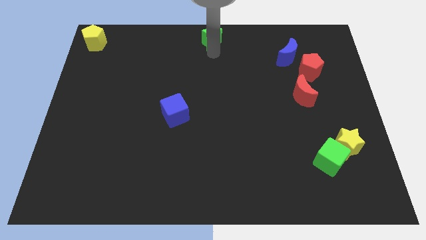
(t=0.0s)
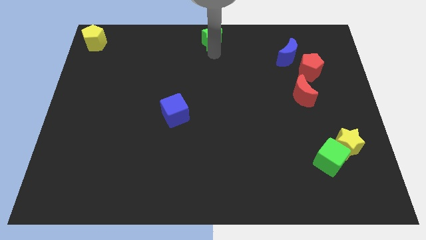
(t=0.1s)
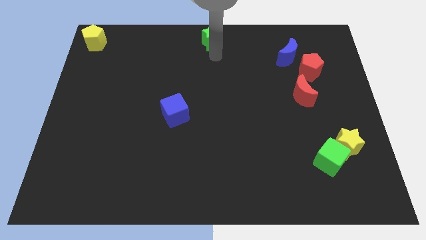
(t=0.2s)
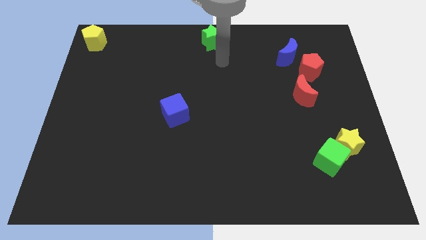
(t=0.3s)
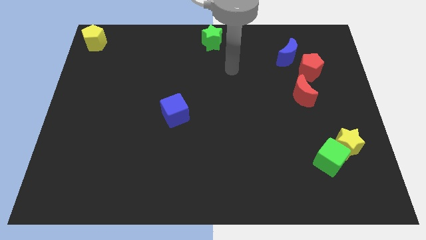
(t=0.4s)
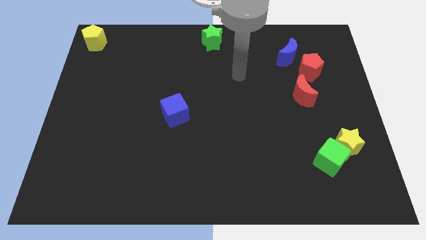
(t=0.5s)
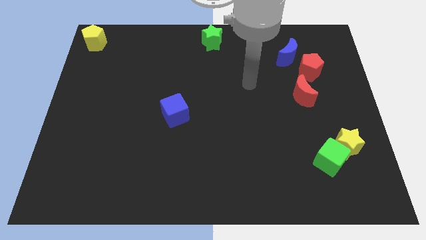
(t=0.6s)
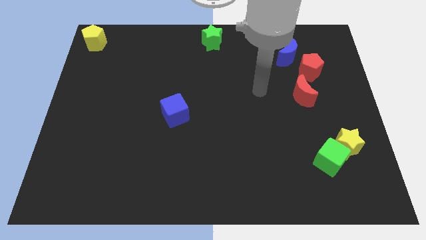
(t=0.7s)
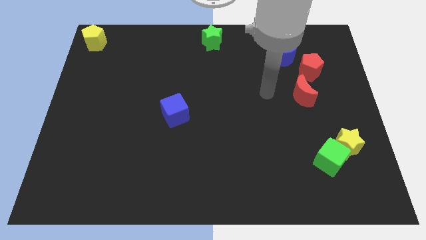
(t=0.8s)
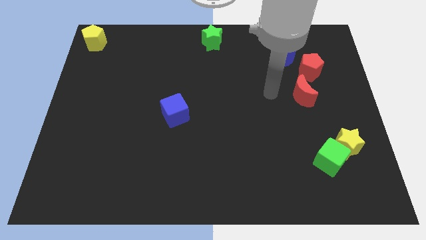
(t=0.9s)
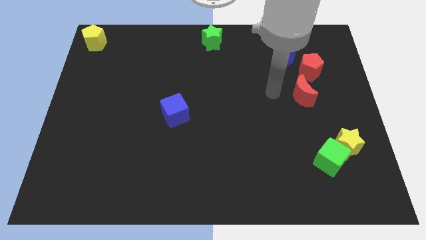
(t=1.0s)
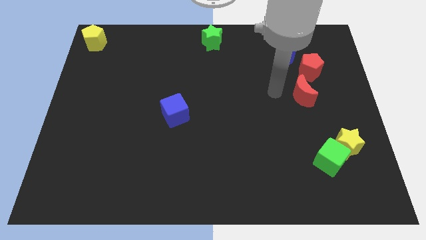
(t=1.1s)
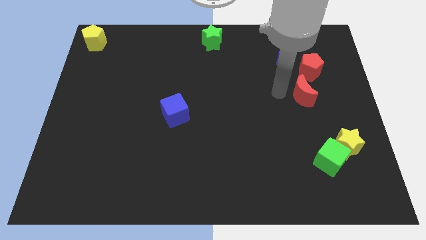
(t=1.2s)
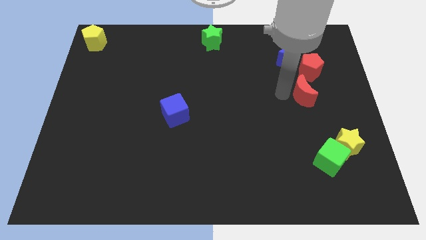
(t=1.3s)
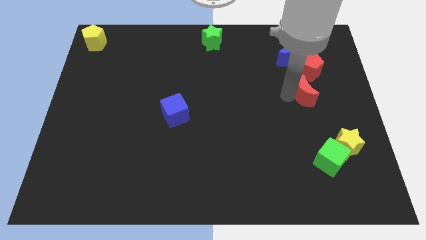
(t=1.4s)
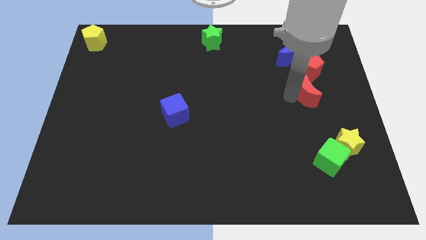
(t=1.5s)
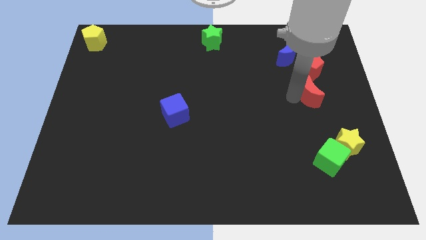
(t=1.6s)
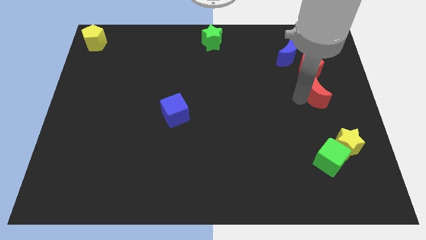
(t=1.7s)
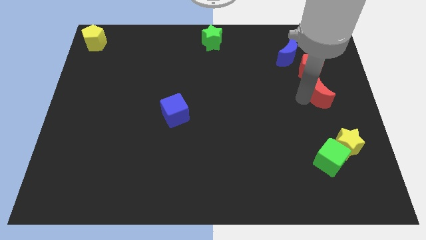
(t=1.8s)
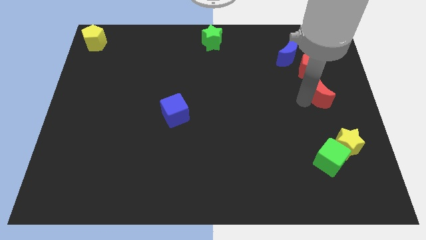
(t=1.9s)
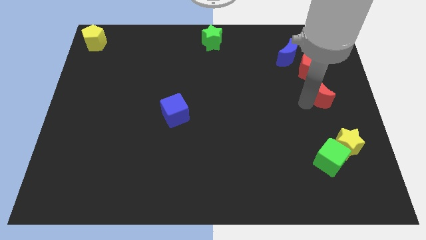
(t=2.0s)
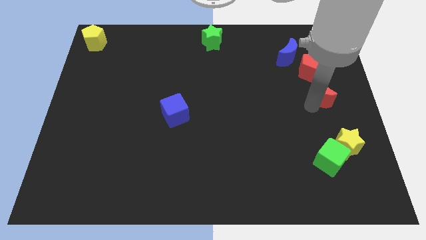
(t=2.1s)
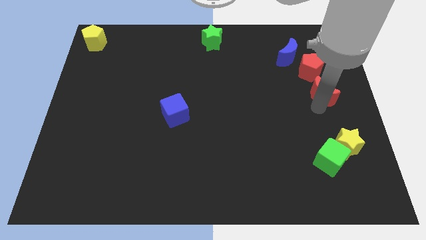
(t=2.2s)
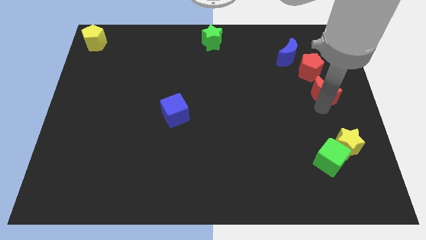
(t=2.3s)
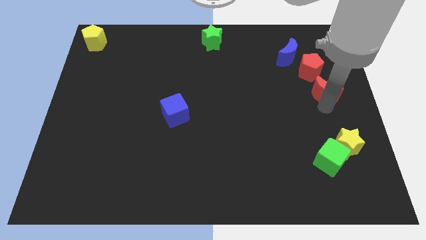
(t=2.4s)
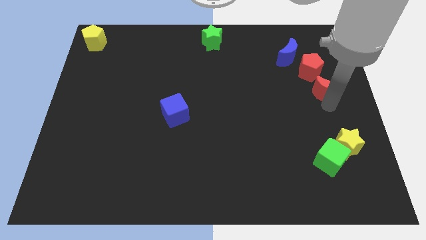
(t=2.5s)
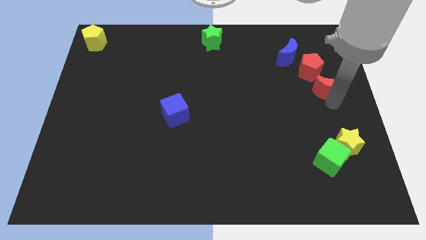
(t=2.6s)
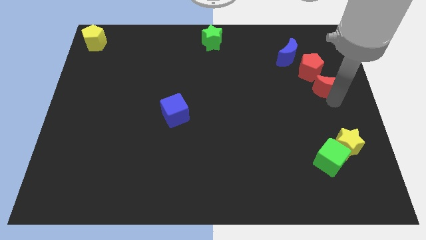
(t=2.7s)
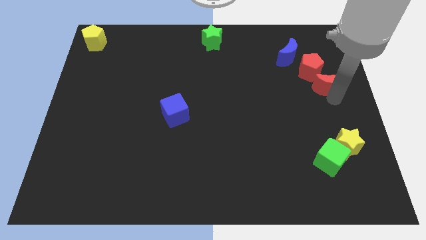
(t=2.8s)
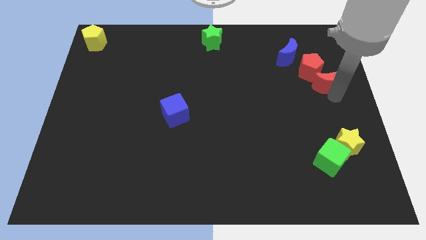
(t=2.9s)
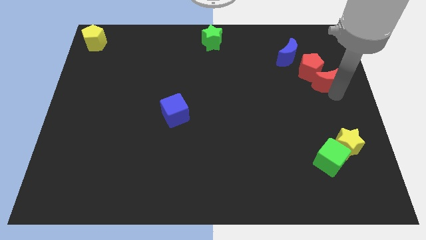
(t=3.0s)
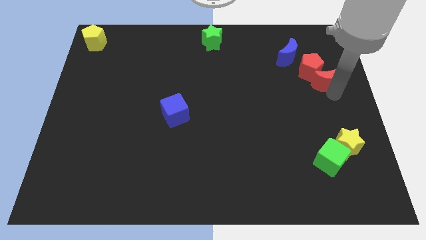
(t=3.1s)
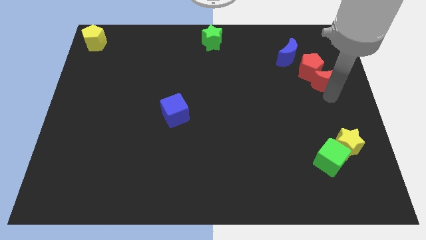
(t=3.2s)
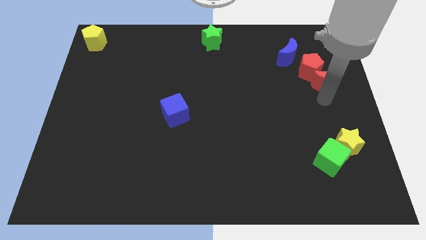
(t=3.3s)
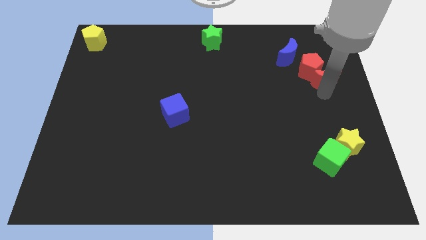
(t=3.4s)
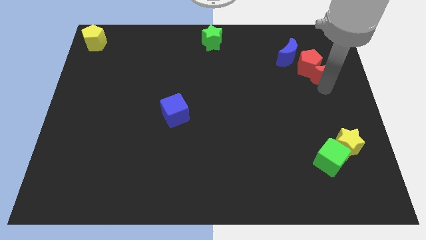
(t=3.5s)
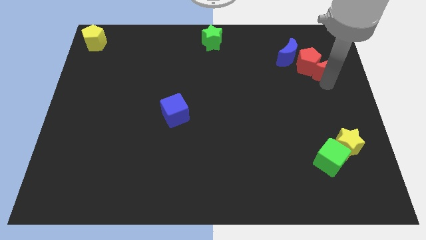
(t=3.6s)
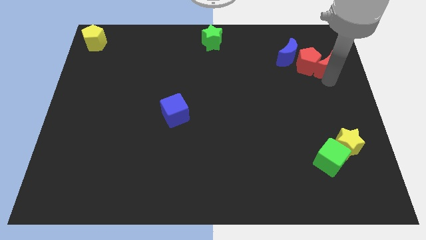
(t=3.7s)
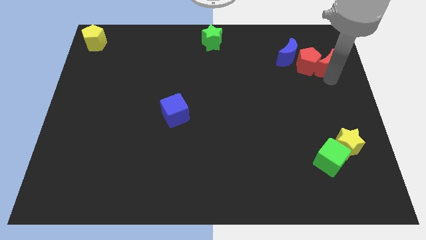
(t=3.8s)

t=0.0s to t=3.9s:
push the red moon to the right of the red pentagon

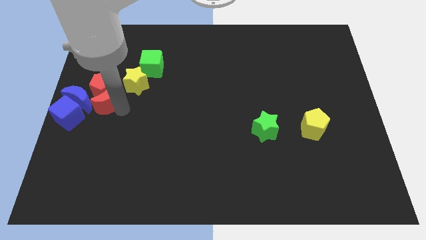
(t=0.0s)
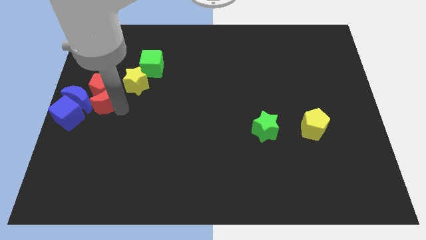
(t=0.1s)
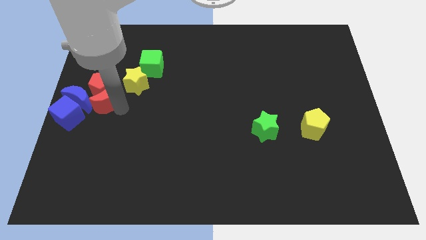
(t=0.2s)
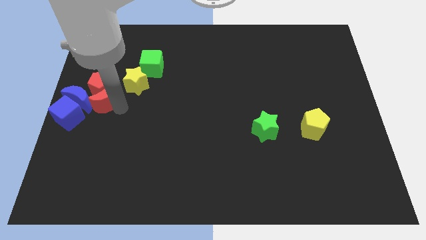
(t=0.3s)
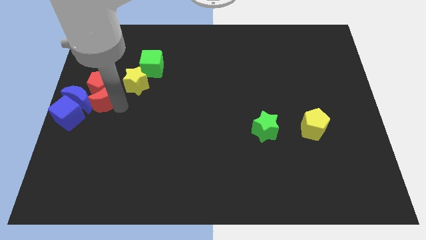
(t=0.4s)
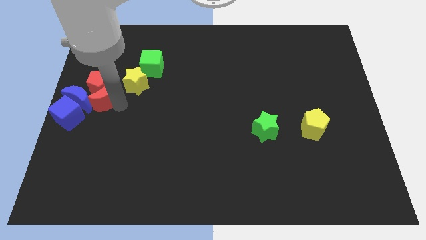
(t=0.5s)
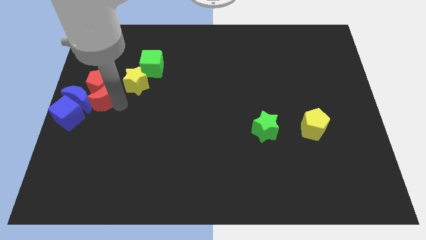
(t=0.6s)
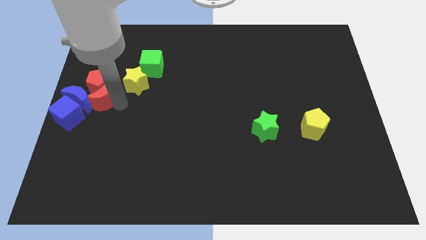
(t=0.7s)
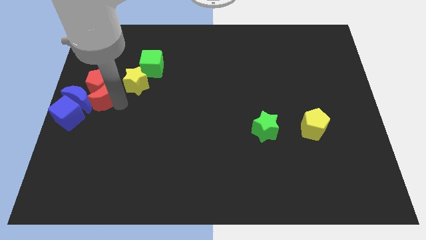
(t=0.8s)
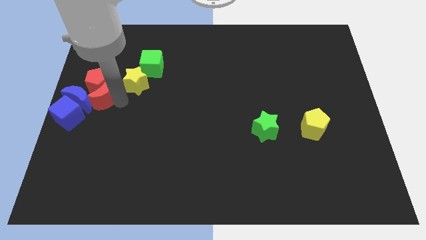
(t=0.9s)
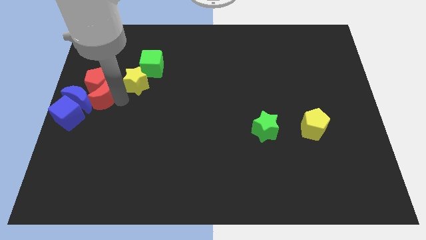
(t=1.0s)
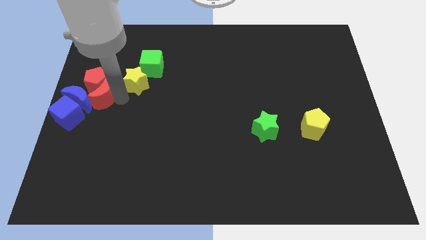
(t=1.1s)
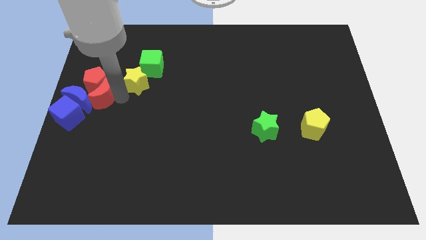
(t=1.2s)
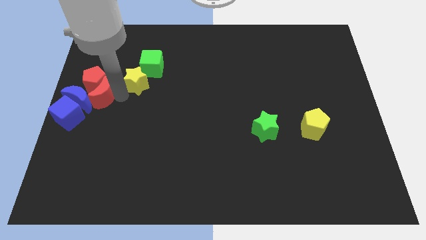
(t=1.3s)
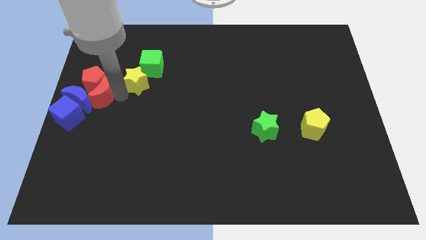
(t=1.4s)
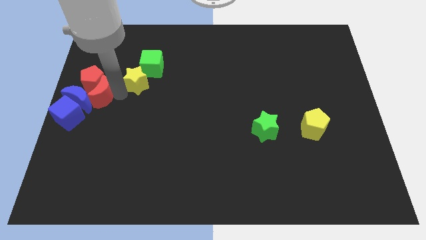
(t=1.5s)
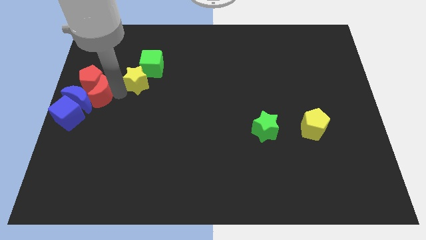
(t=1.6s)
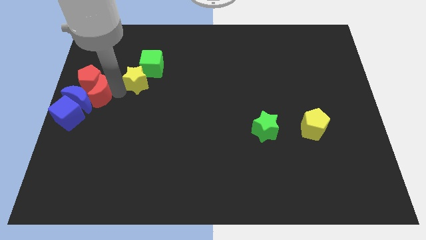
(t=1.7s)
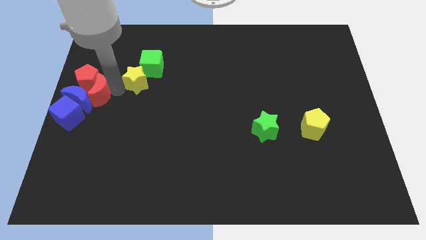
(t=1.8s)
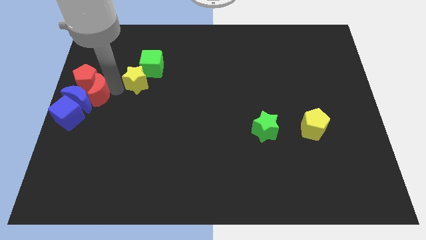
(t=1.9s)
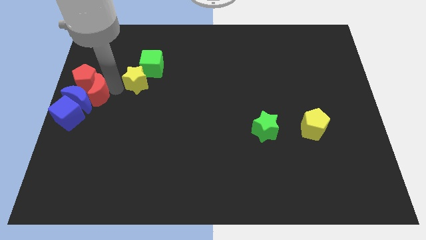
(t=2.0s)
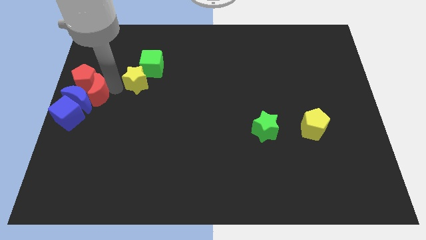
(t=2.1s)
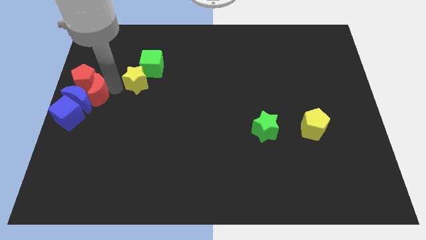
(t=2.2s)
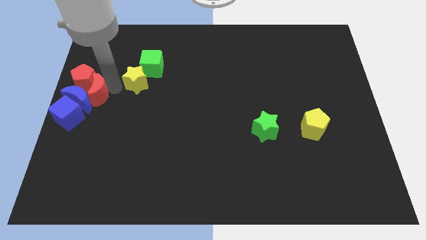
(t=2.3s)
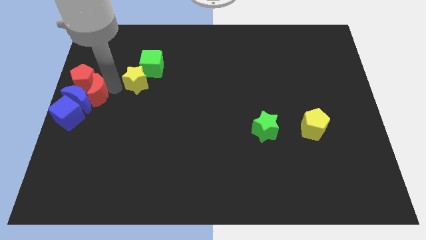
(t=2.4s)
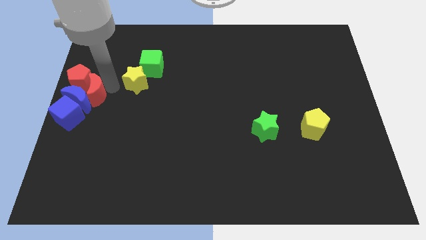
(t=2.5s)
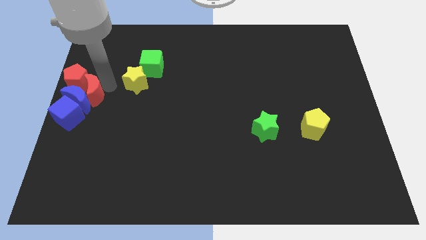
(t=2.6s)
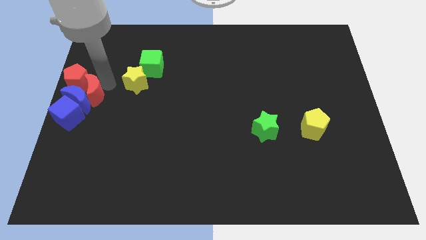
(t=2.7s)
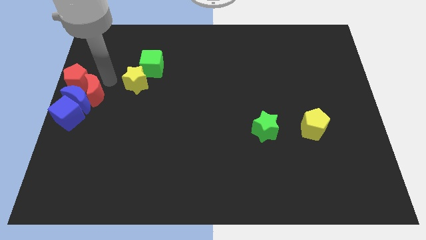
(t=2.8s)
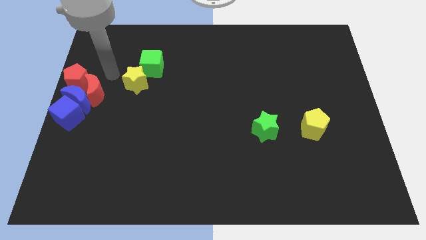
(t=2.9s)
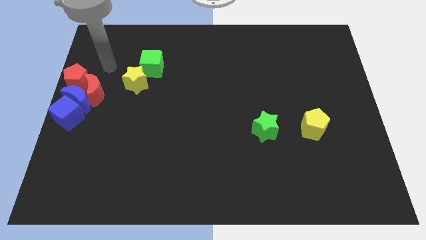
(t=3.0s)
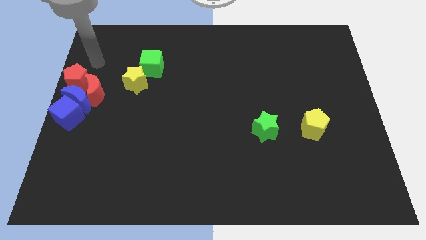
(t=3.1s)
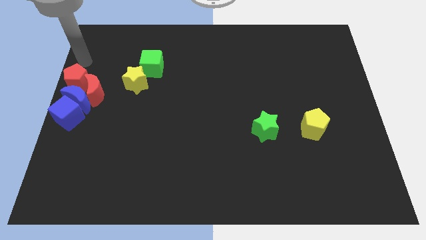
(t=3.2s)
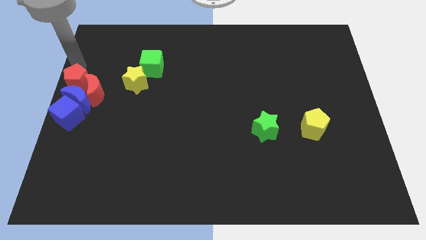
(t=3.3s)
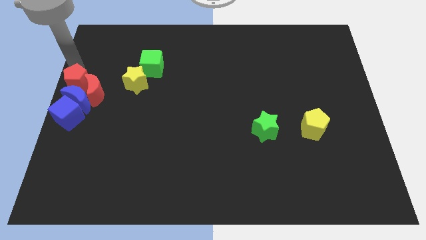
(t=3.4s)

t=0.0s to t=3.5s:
place the red blocks at the top of the blue blocks

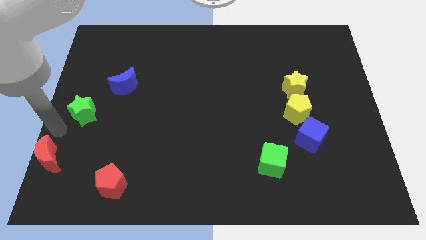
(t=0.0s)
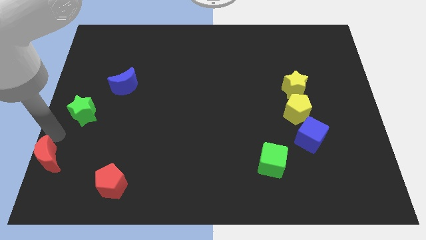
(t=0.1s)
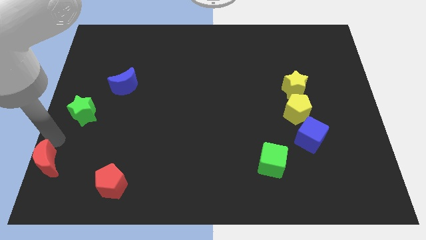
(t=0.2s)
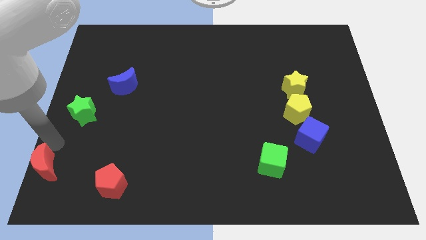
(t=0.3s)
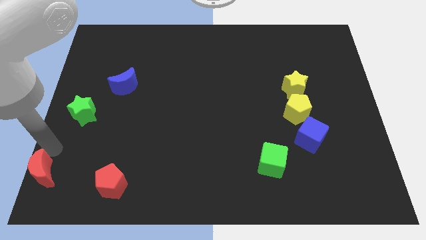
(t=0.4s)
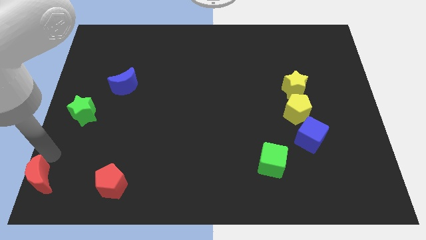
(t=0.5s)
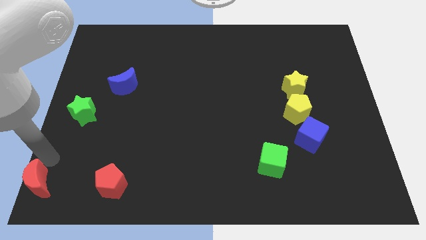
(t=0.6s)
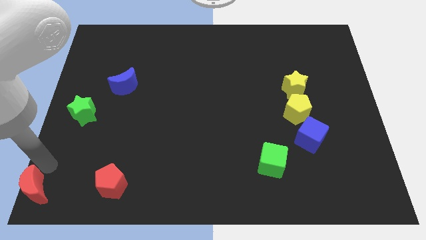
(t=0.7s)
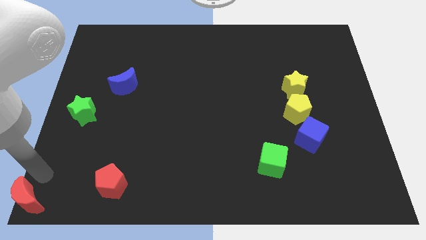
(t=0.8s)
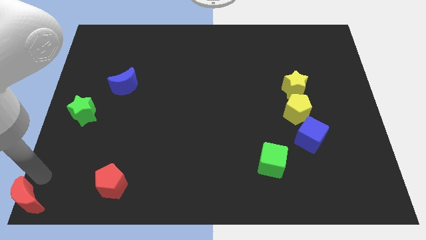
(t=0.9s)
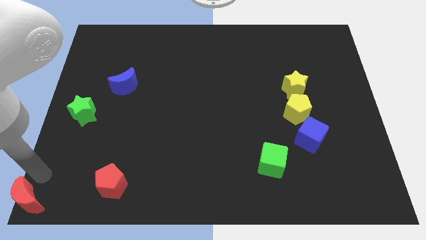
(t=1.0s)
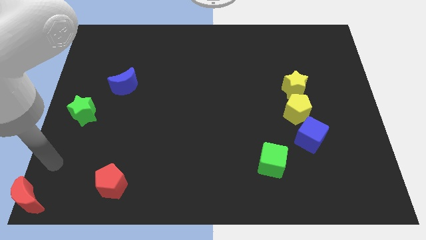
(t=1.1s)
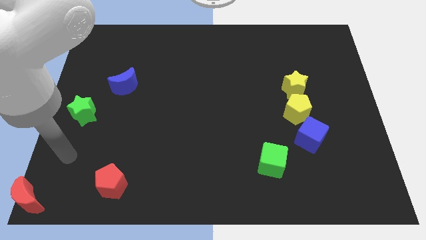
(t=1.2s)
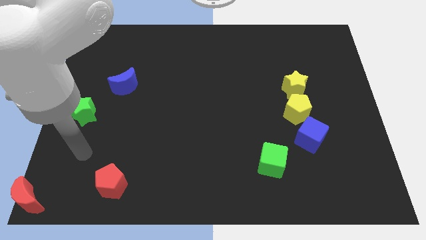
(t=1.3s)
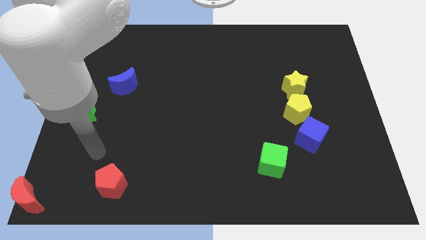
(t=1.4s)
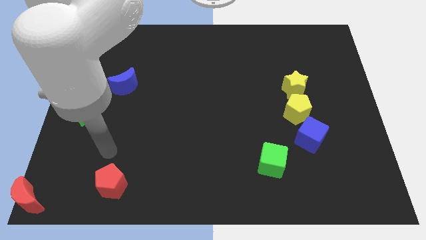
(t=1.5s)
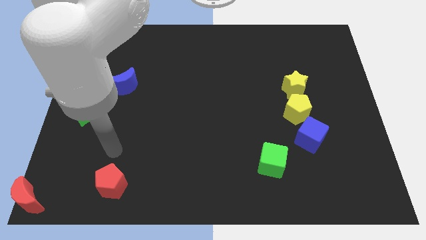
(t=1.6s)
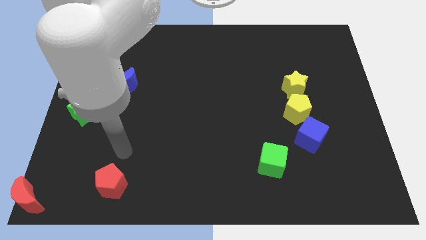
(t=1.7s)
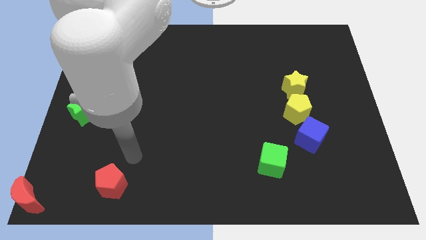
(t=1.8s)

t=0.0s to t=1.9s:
push the red crescent to the bottom left
